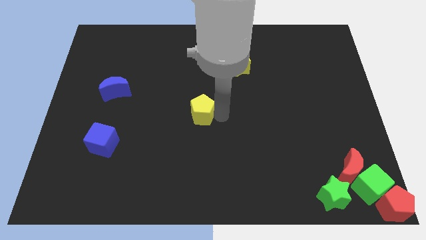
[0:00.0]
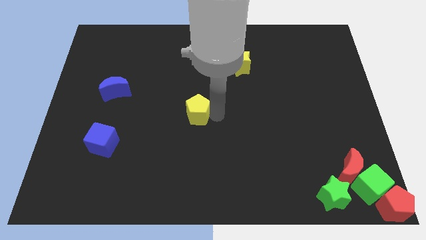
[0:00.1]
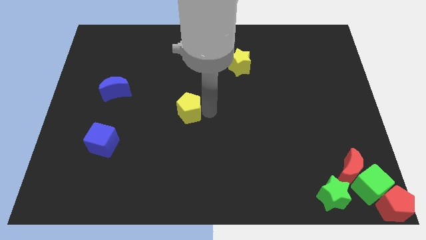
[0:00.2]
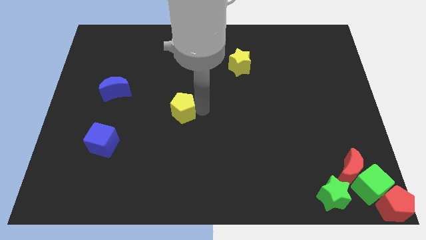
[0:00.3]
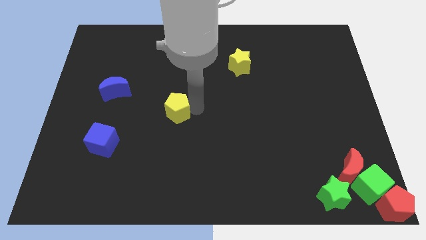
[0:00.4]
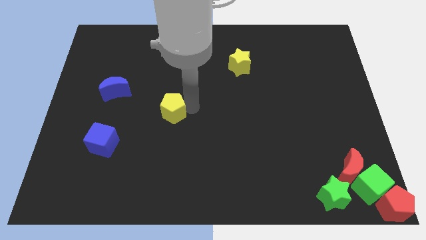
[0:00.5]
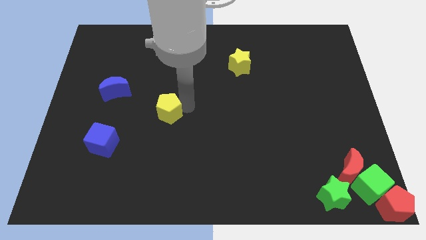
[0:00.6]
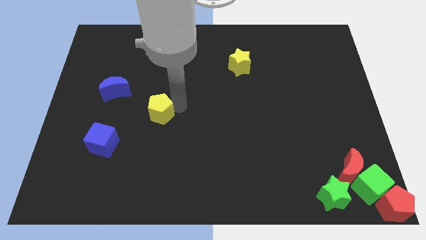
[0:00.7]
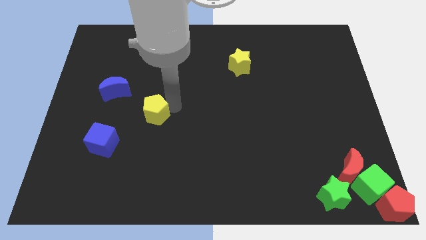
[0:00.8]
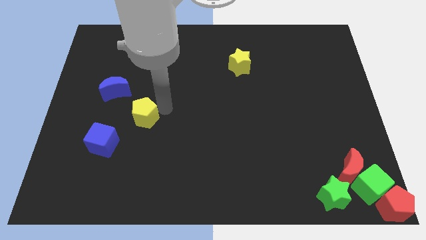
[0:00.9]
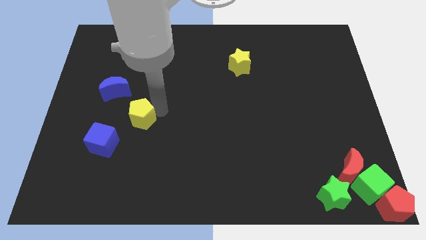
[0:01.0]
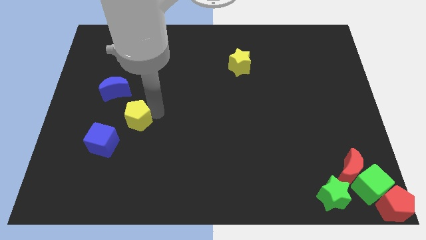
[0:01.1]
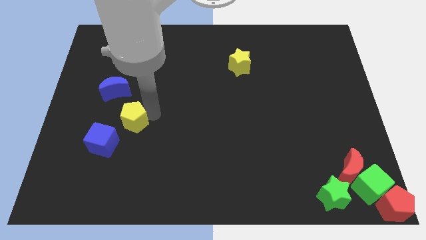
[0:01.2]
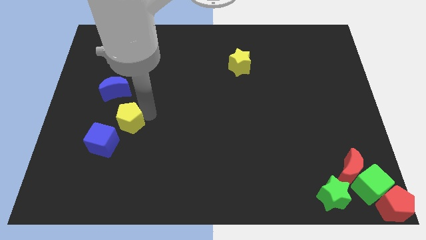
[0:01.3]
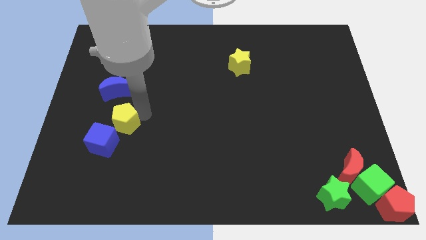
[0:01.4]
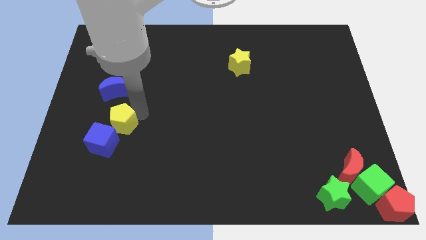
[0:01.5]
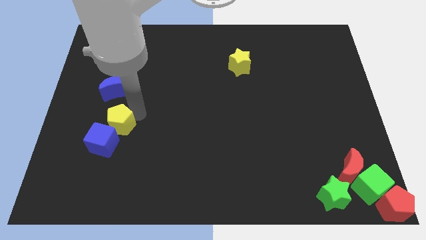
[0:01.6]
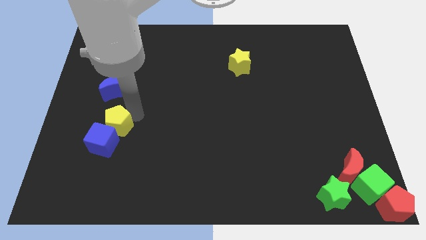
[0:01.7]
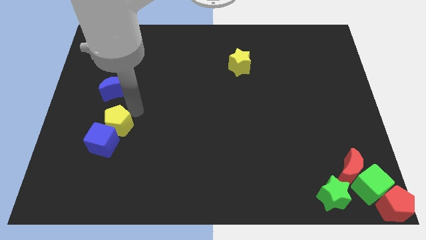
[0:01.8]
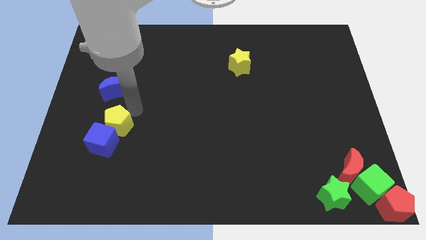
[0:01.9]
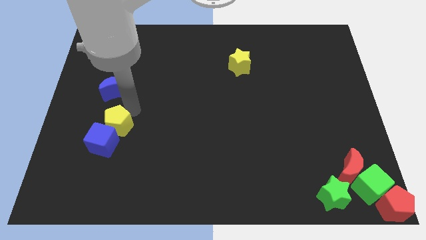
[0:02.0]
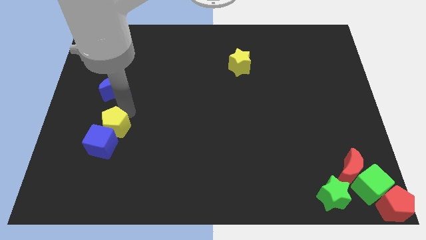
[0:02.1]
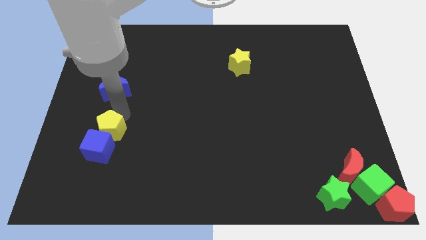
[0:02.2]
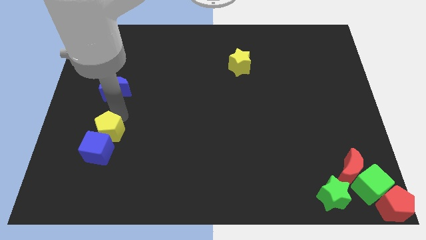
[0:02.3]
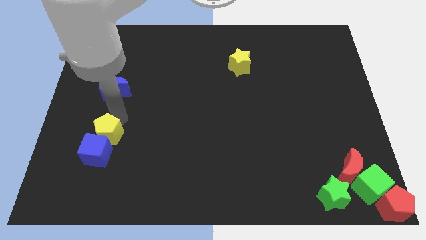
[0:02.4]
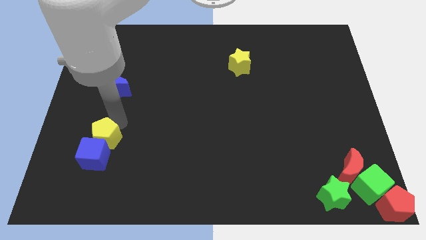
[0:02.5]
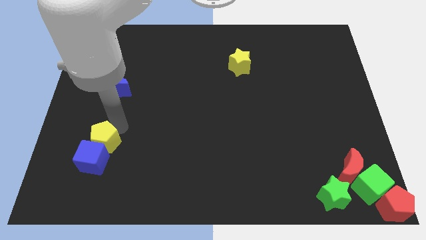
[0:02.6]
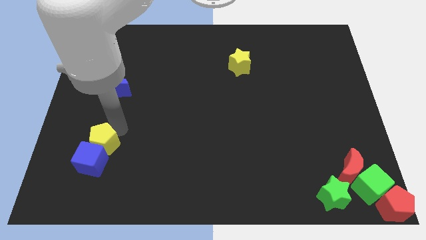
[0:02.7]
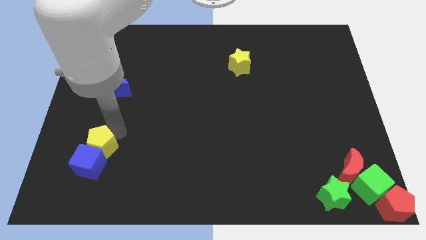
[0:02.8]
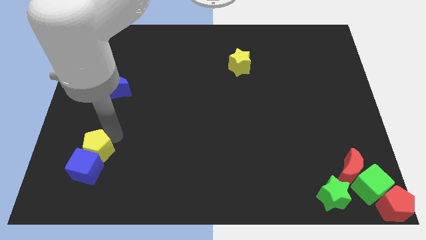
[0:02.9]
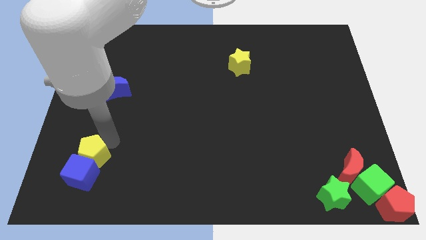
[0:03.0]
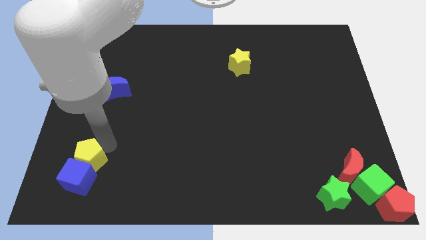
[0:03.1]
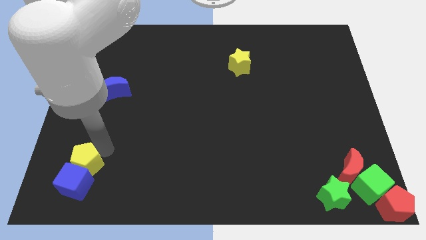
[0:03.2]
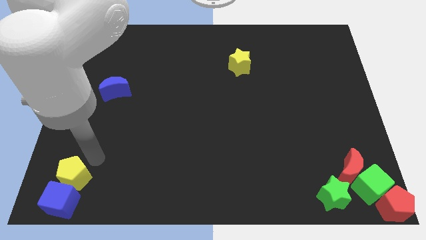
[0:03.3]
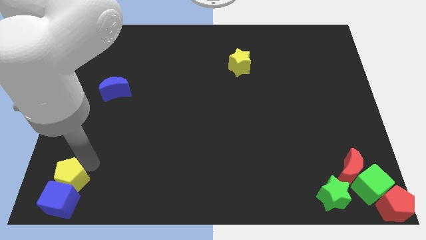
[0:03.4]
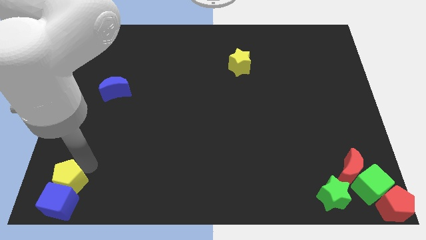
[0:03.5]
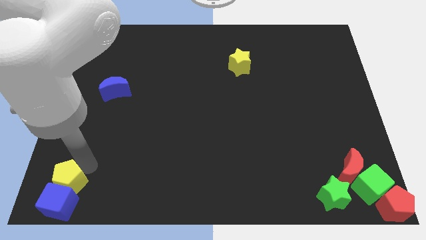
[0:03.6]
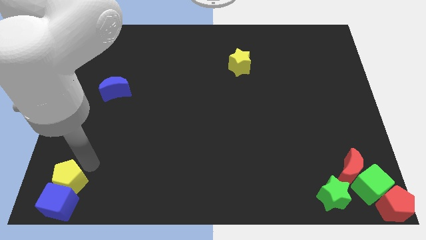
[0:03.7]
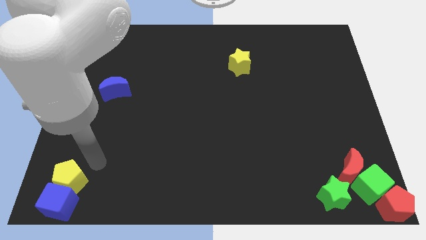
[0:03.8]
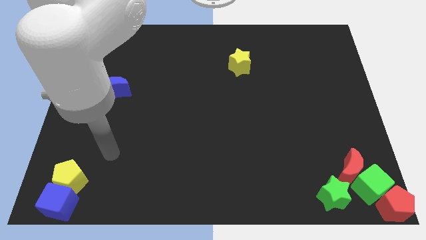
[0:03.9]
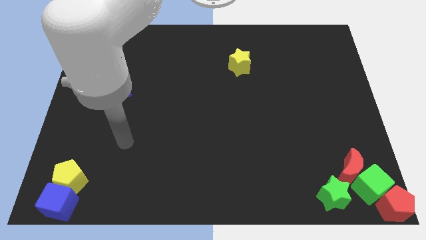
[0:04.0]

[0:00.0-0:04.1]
move yellow pentagon and blue cube to the bottom left

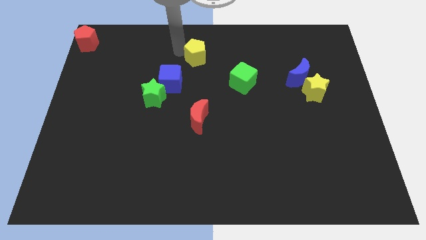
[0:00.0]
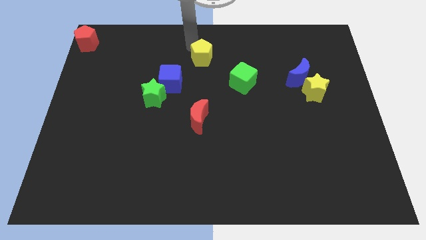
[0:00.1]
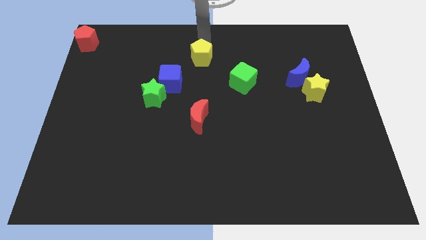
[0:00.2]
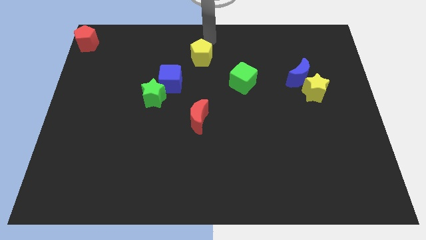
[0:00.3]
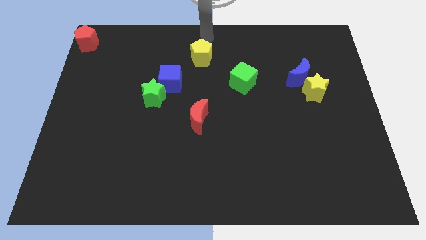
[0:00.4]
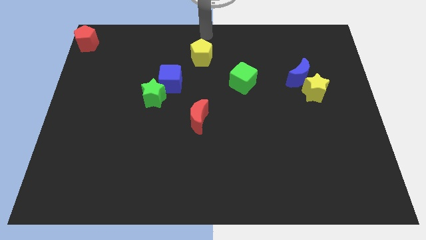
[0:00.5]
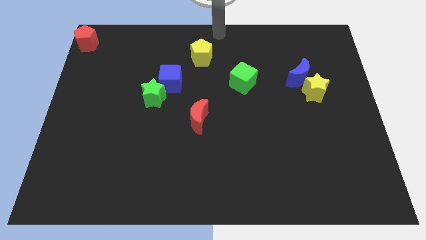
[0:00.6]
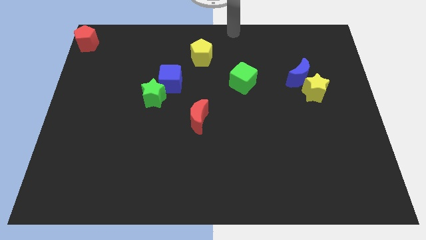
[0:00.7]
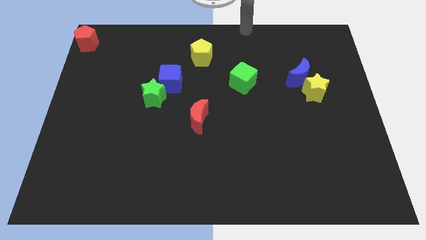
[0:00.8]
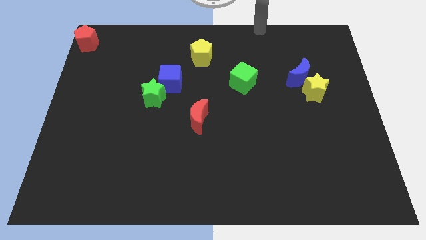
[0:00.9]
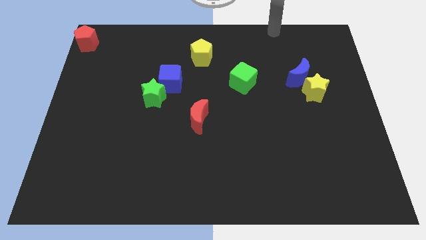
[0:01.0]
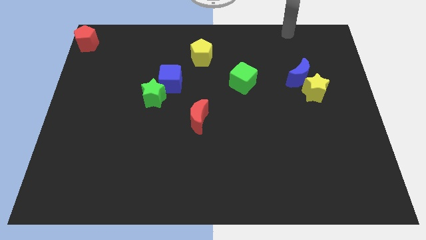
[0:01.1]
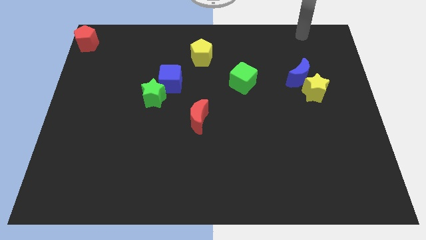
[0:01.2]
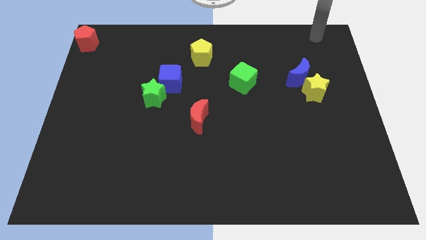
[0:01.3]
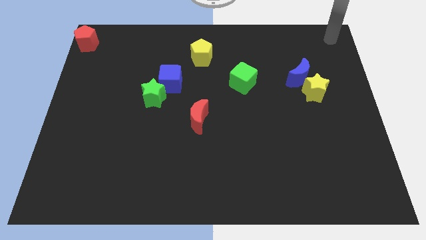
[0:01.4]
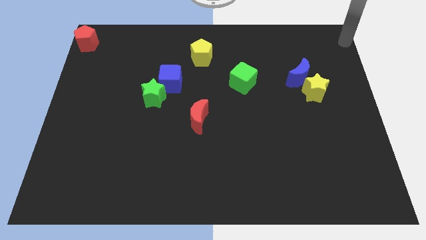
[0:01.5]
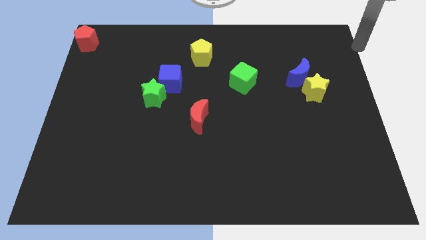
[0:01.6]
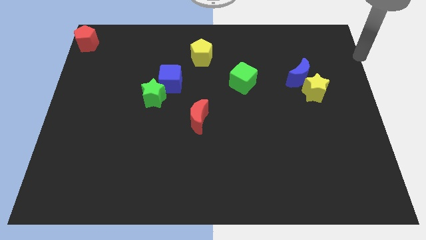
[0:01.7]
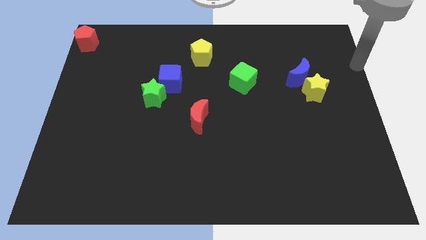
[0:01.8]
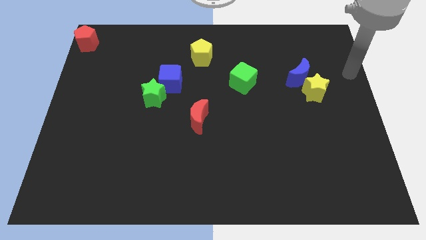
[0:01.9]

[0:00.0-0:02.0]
move the arm towards the yellow star

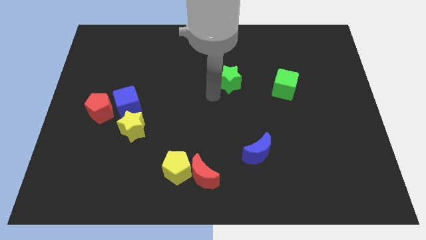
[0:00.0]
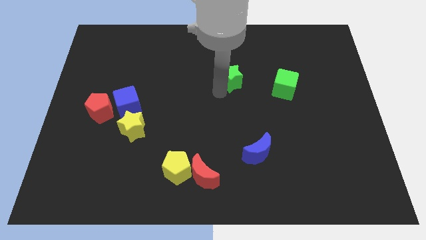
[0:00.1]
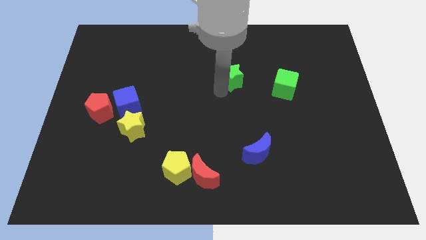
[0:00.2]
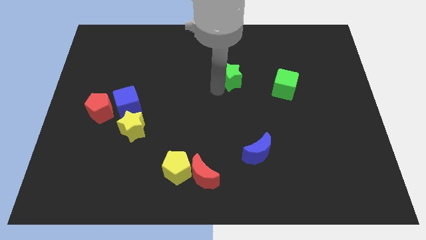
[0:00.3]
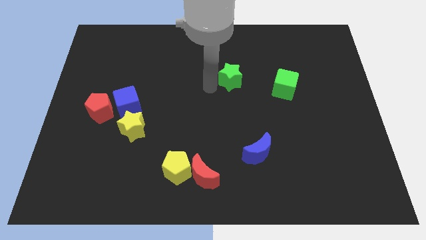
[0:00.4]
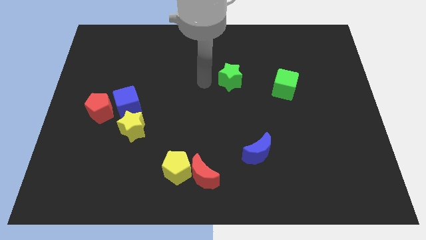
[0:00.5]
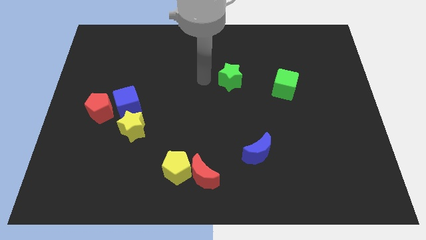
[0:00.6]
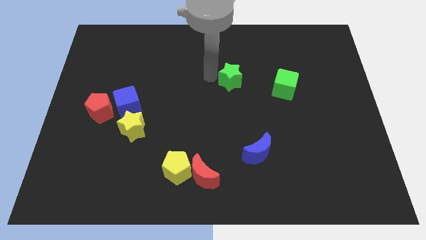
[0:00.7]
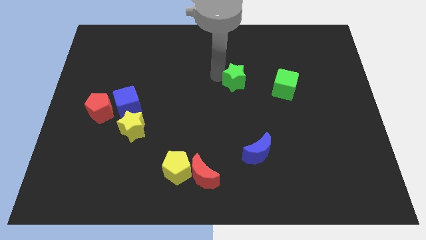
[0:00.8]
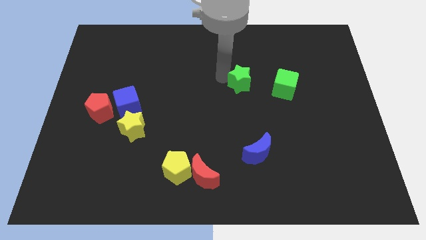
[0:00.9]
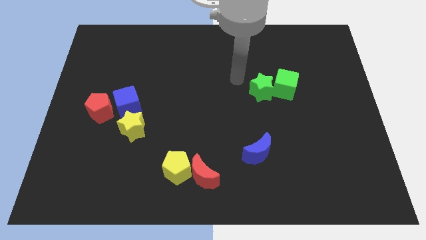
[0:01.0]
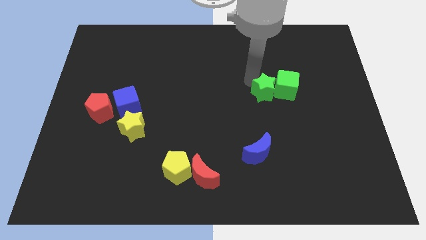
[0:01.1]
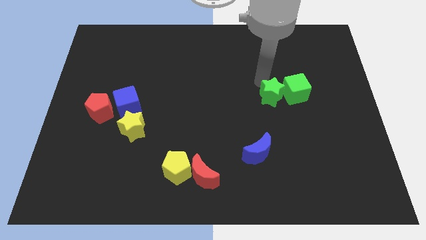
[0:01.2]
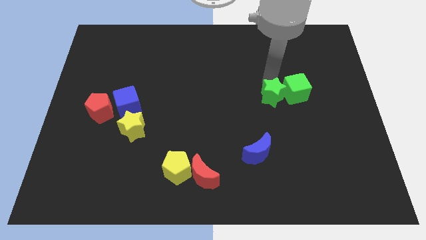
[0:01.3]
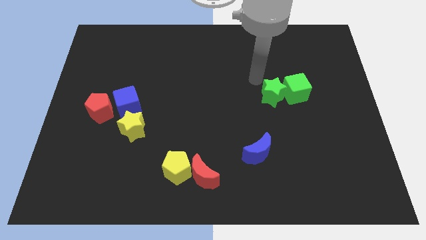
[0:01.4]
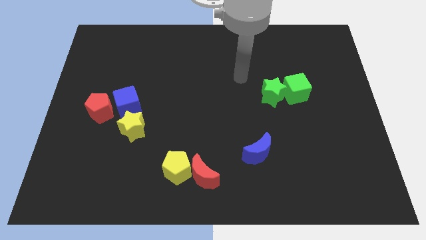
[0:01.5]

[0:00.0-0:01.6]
move the green star into green cube

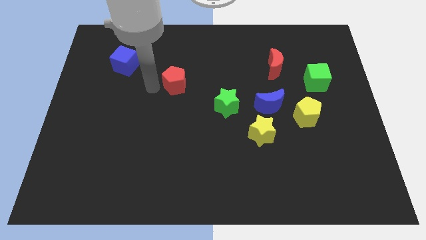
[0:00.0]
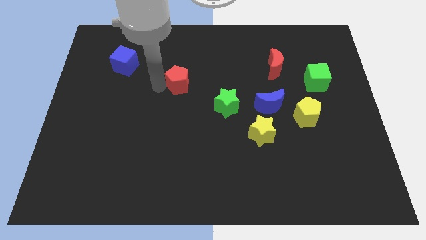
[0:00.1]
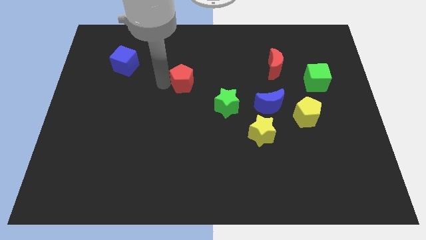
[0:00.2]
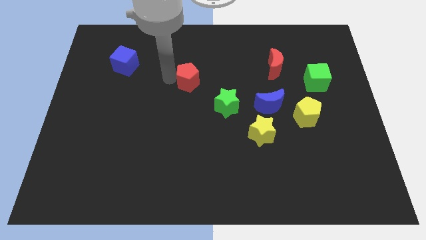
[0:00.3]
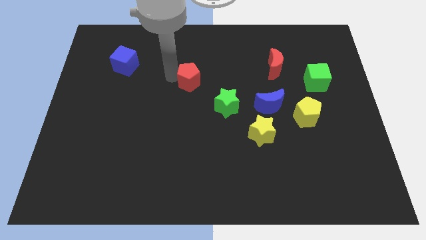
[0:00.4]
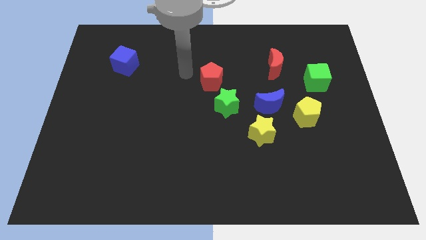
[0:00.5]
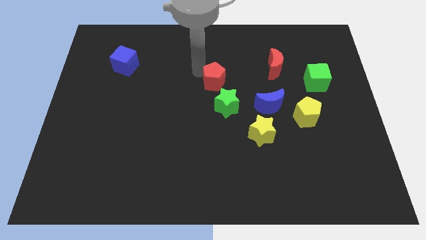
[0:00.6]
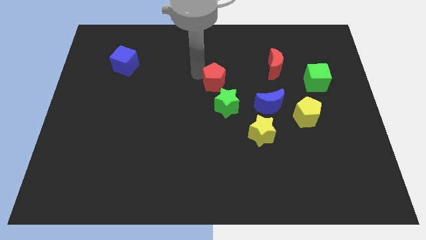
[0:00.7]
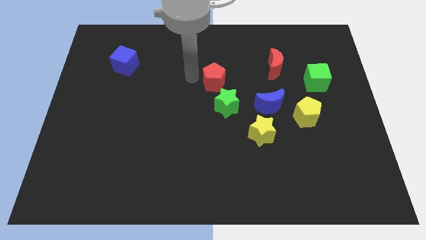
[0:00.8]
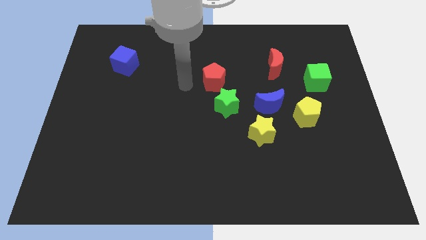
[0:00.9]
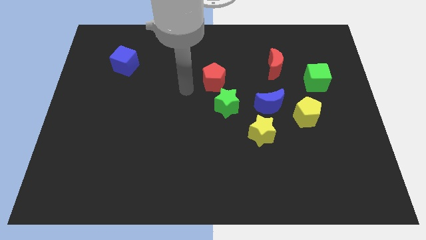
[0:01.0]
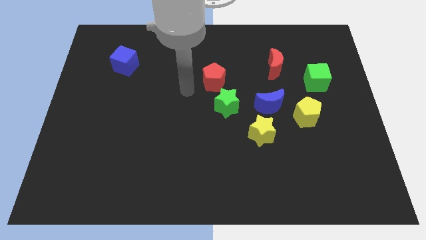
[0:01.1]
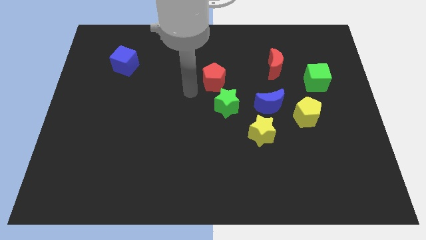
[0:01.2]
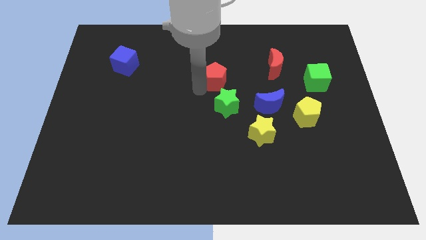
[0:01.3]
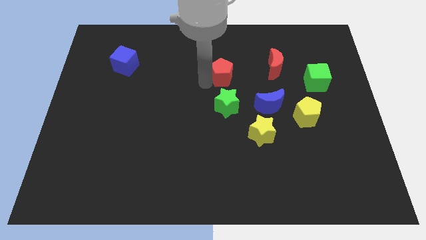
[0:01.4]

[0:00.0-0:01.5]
put the red pentagon parallel to the green cube
